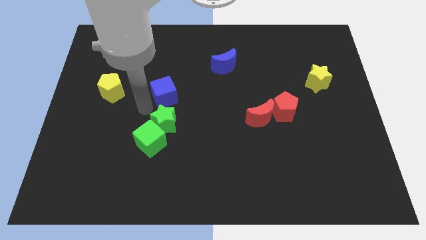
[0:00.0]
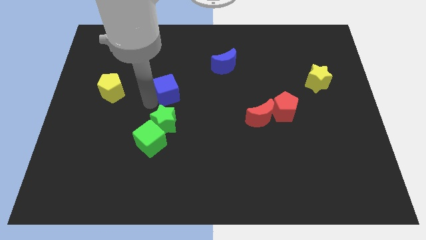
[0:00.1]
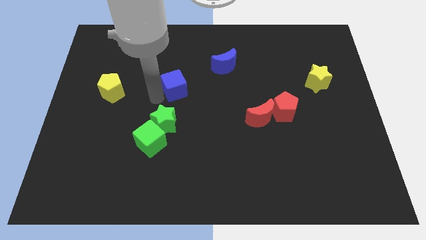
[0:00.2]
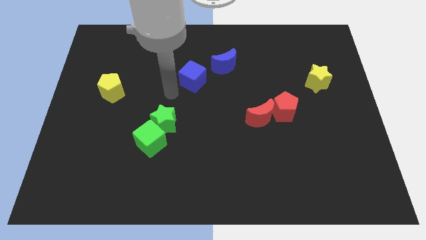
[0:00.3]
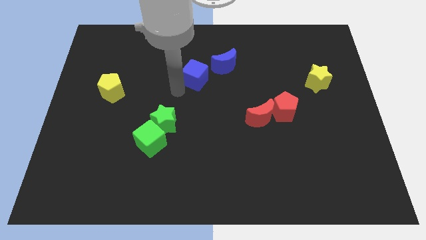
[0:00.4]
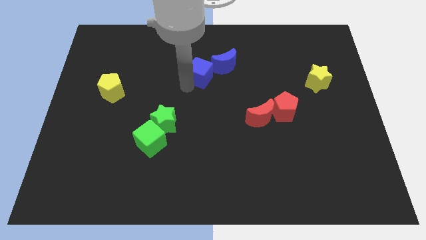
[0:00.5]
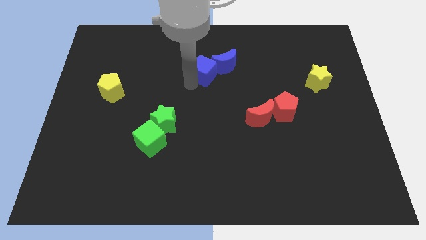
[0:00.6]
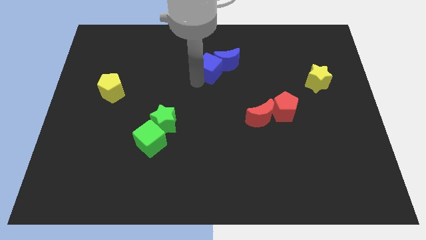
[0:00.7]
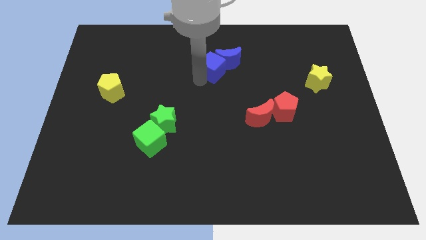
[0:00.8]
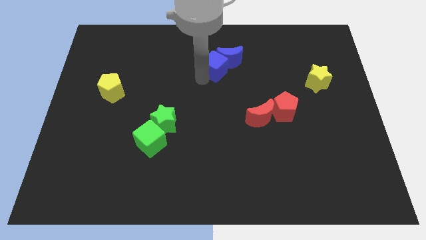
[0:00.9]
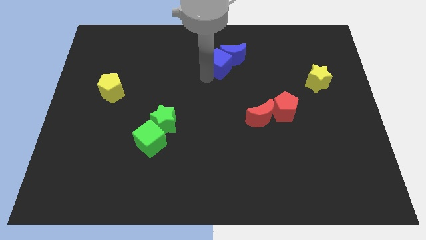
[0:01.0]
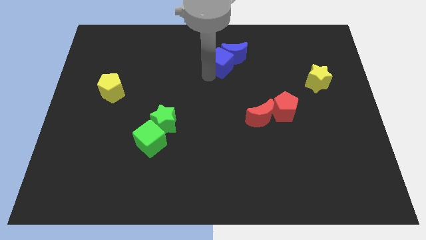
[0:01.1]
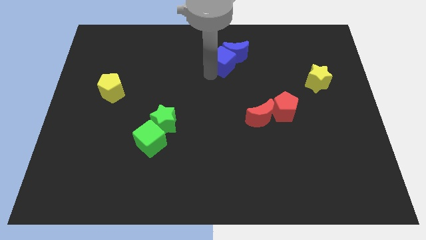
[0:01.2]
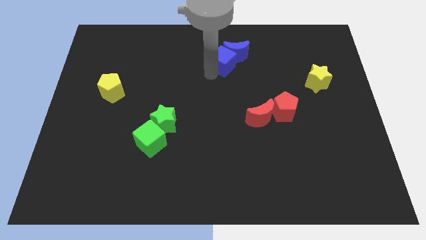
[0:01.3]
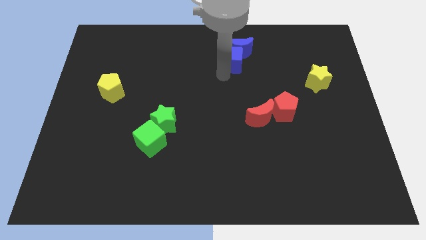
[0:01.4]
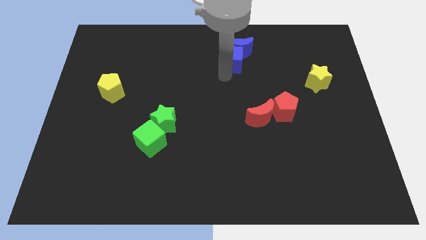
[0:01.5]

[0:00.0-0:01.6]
move the blue cube into the blue crescent

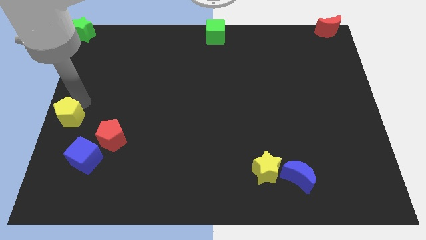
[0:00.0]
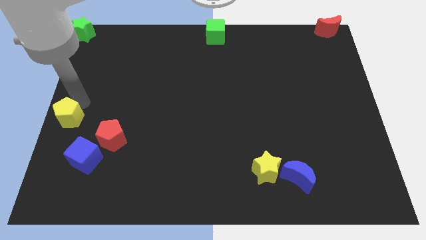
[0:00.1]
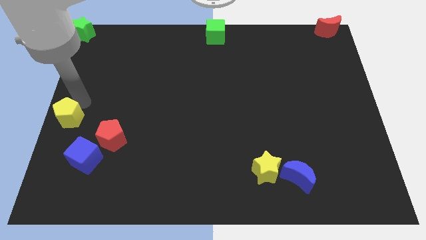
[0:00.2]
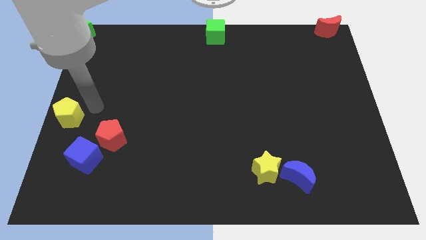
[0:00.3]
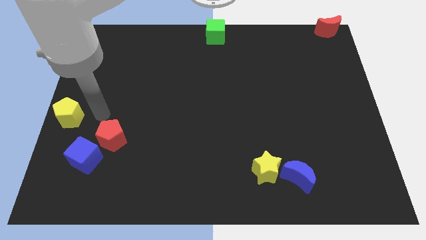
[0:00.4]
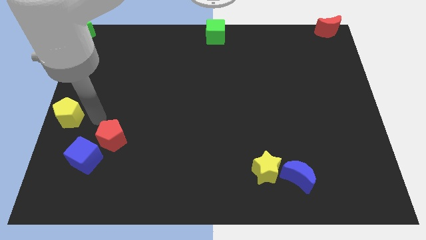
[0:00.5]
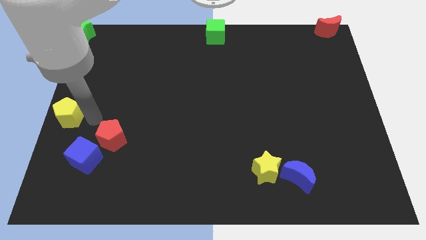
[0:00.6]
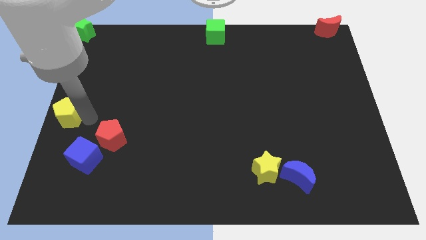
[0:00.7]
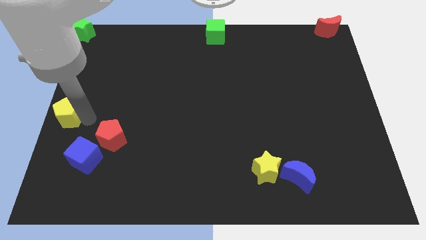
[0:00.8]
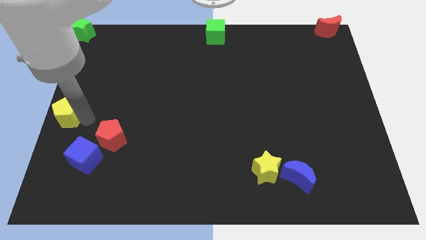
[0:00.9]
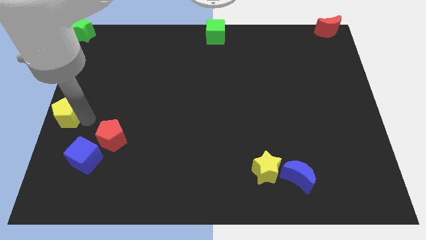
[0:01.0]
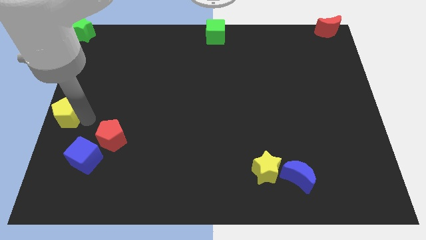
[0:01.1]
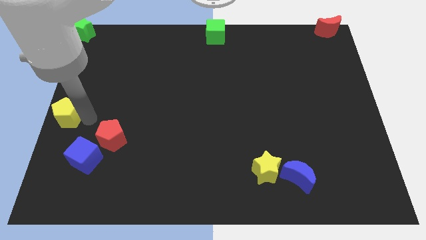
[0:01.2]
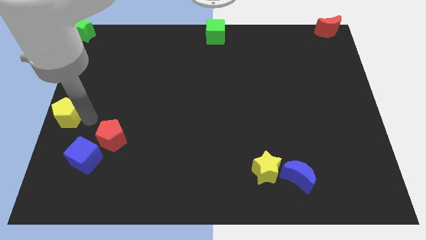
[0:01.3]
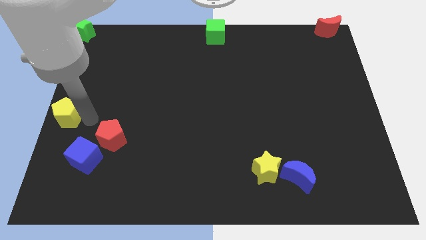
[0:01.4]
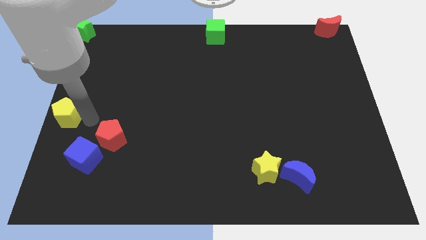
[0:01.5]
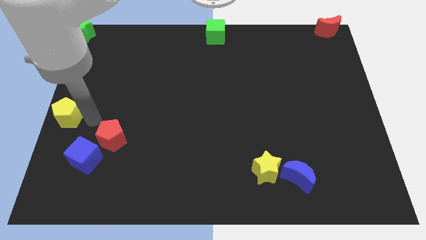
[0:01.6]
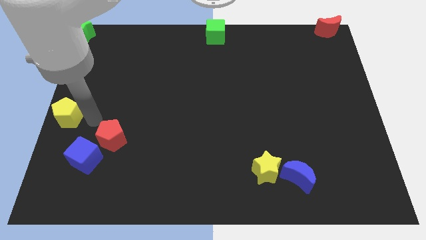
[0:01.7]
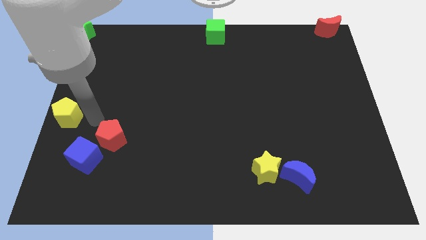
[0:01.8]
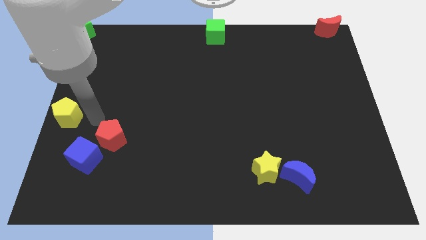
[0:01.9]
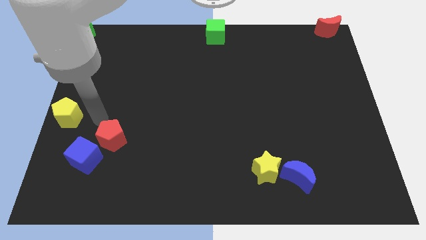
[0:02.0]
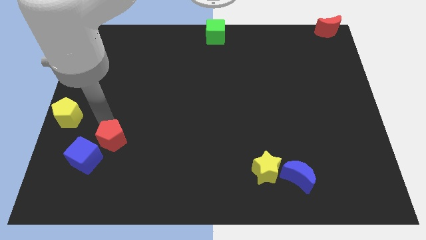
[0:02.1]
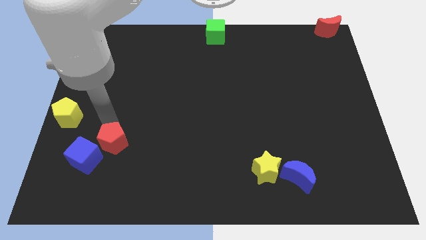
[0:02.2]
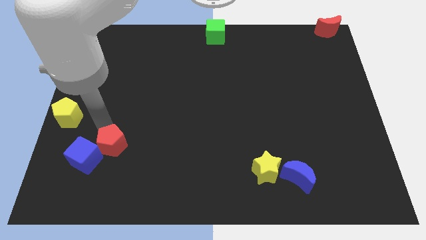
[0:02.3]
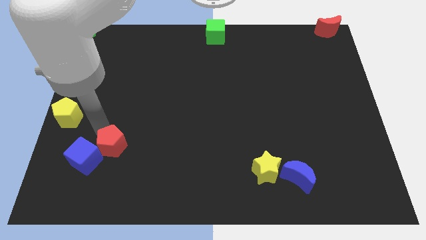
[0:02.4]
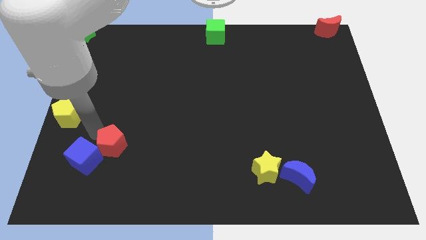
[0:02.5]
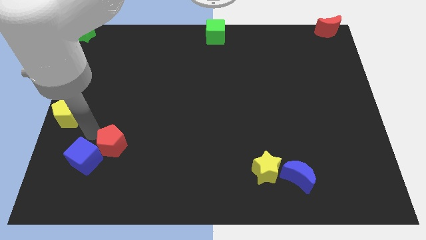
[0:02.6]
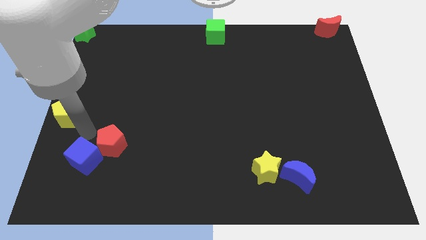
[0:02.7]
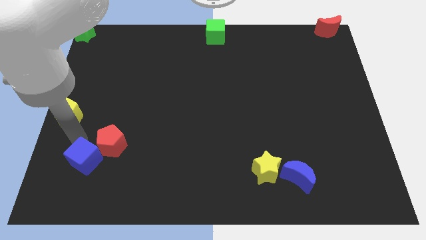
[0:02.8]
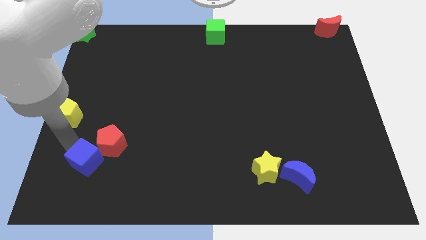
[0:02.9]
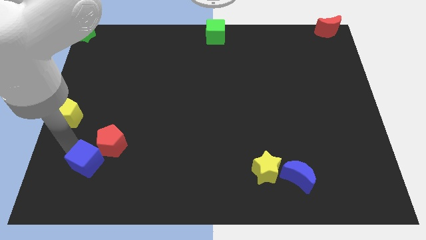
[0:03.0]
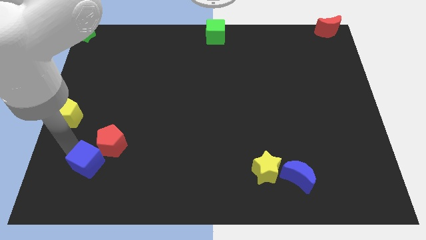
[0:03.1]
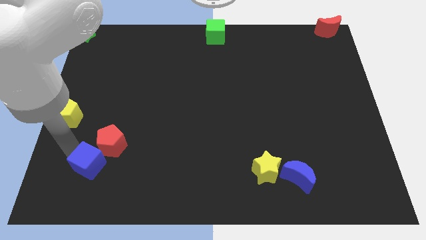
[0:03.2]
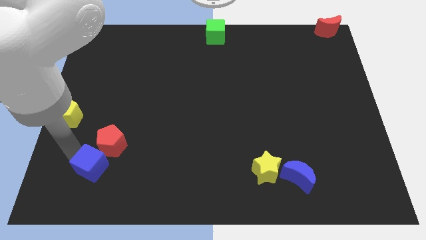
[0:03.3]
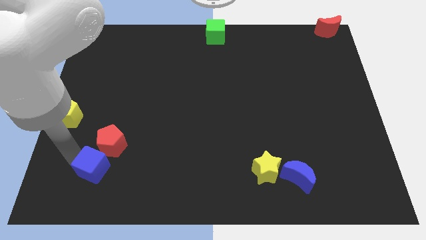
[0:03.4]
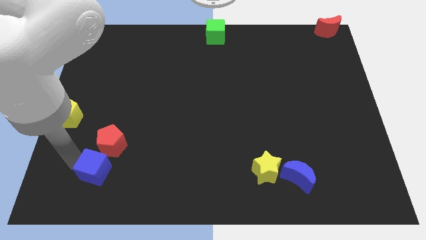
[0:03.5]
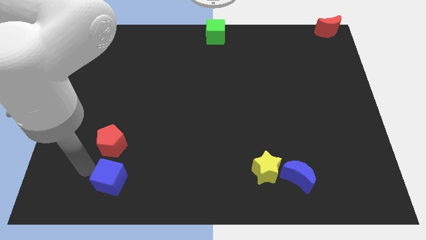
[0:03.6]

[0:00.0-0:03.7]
push blue cube to the bottom of red pentagon

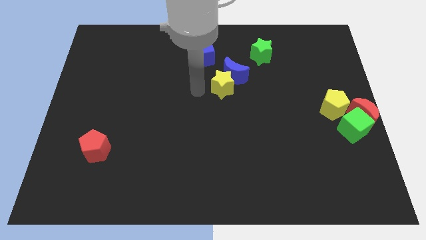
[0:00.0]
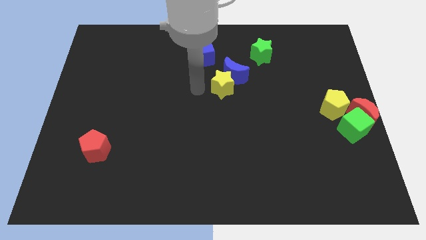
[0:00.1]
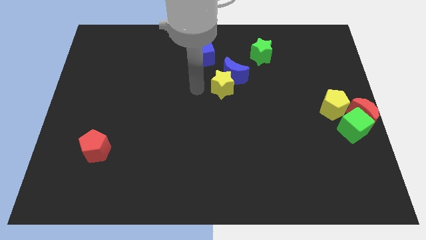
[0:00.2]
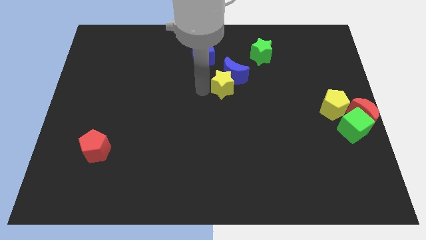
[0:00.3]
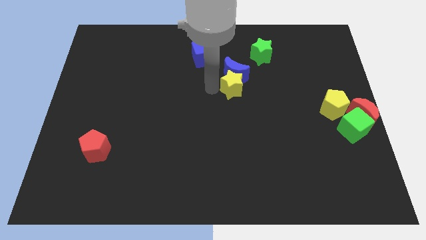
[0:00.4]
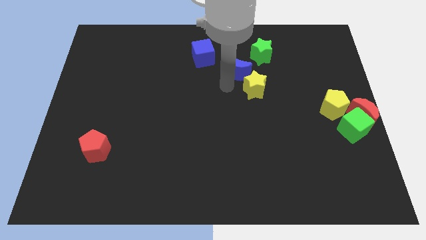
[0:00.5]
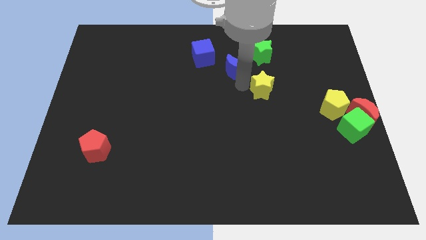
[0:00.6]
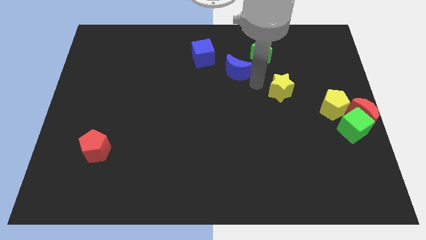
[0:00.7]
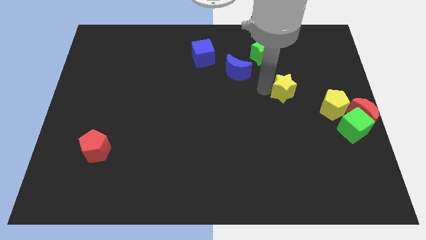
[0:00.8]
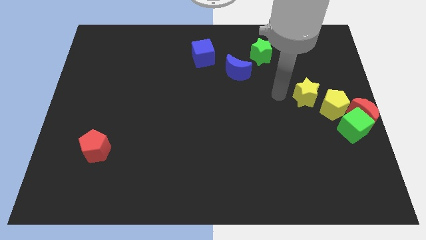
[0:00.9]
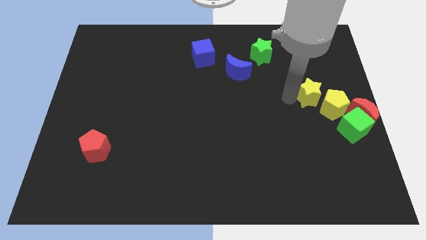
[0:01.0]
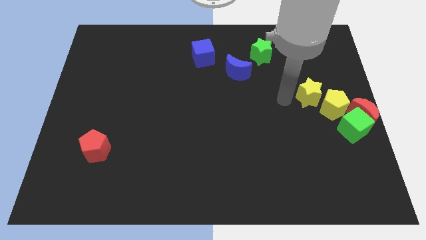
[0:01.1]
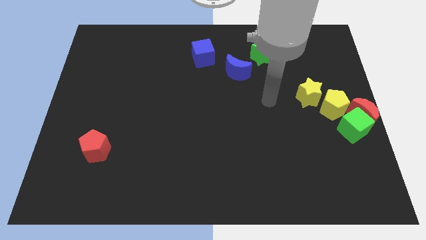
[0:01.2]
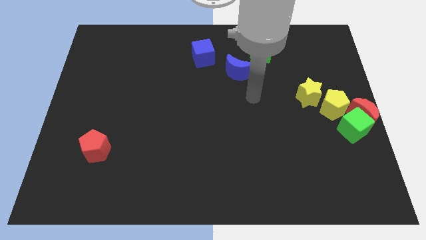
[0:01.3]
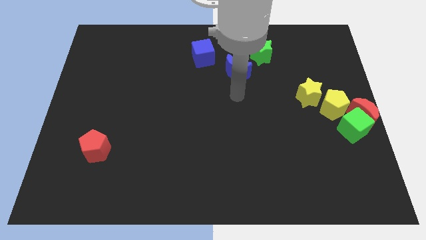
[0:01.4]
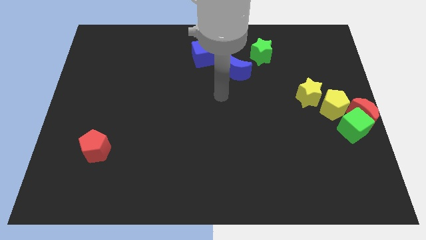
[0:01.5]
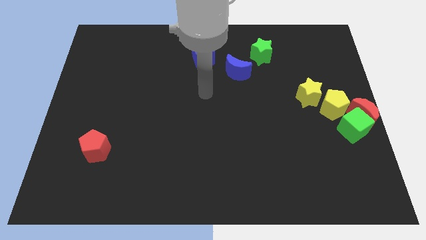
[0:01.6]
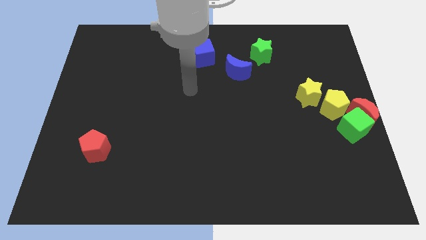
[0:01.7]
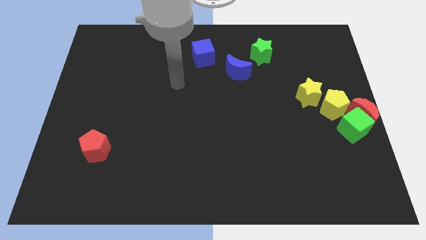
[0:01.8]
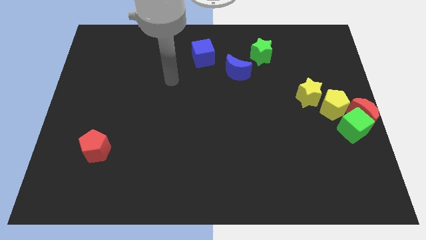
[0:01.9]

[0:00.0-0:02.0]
push the yellow star towards the yellow pentagon

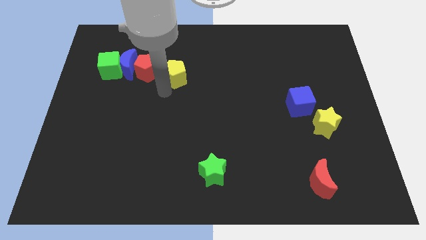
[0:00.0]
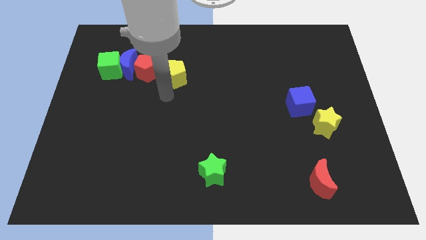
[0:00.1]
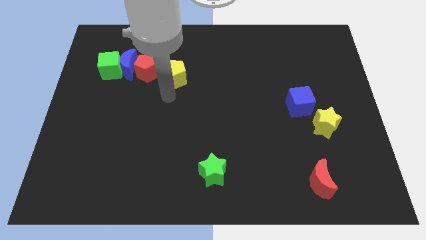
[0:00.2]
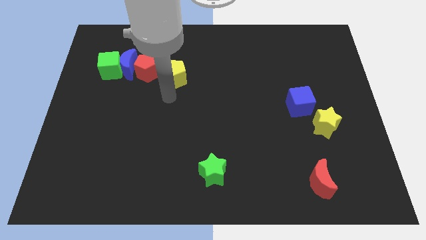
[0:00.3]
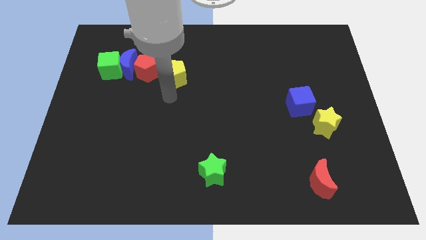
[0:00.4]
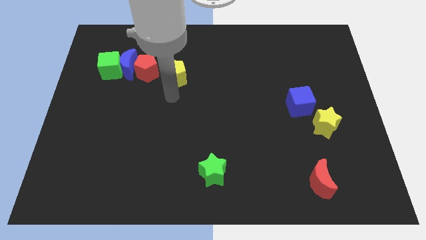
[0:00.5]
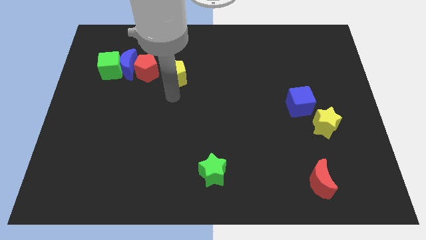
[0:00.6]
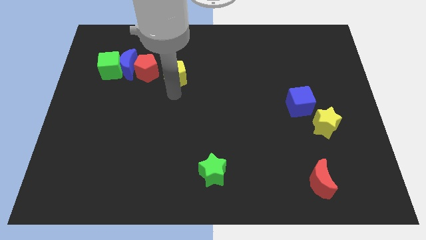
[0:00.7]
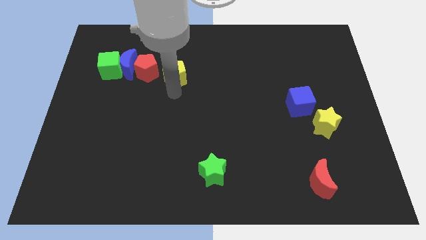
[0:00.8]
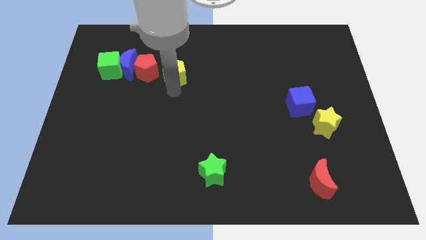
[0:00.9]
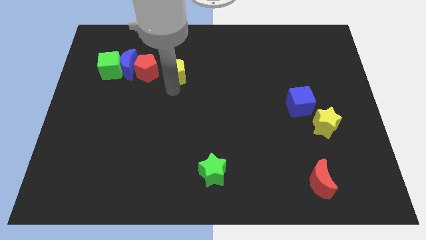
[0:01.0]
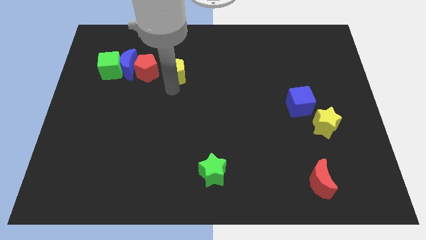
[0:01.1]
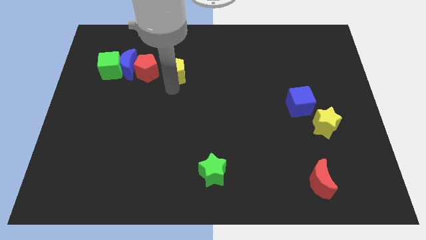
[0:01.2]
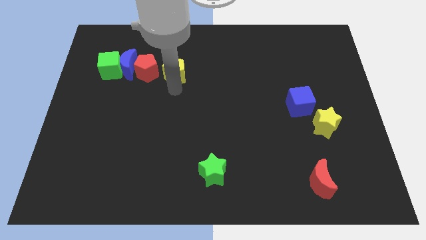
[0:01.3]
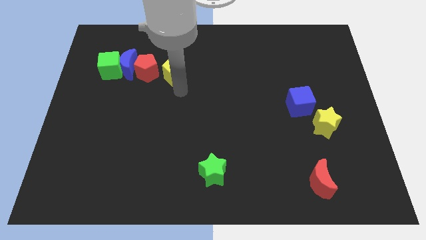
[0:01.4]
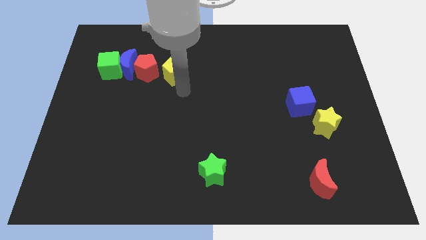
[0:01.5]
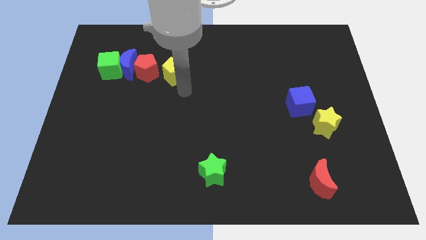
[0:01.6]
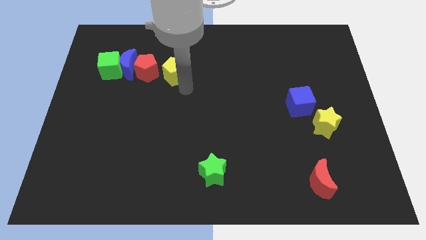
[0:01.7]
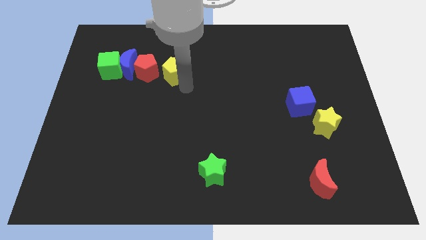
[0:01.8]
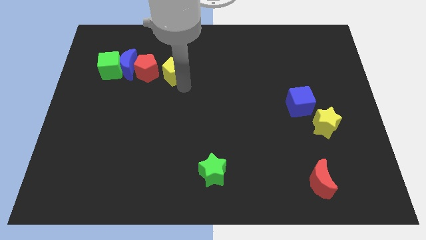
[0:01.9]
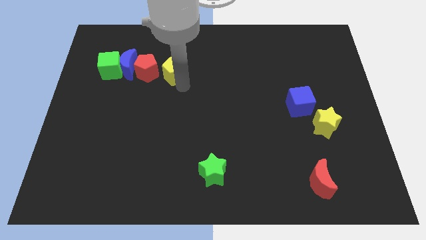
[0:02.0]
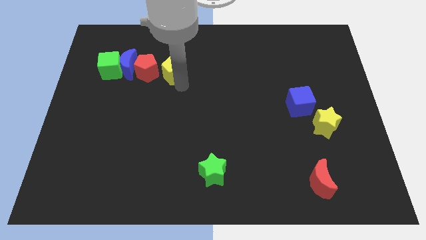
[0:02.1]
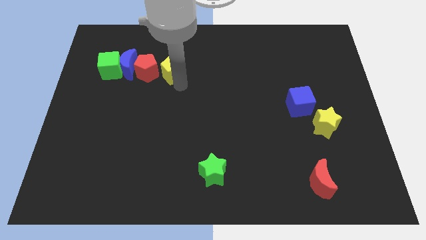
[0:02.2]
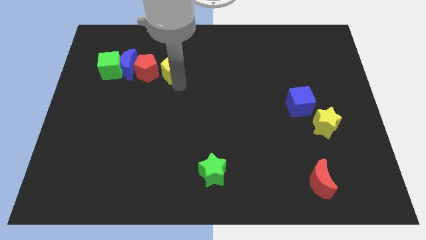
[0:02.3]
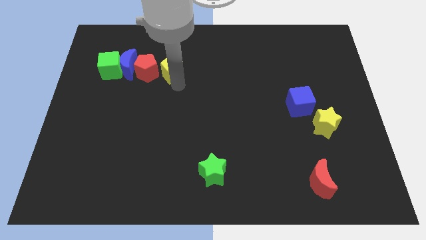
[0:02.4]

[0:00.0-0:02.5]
push the yellow pentagon right to the red pentagon
